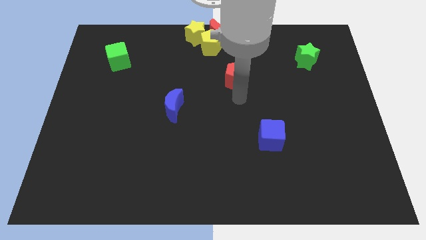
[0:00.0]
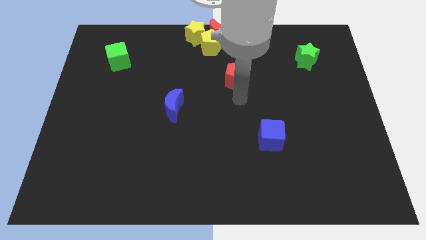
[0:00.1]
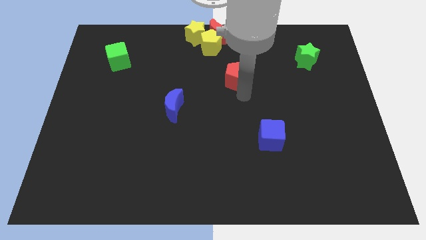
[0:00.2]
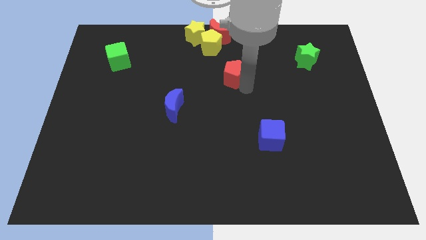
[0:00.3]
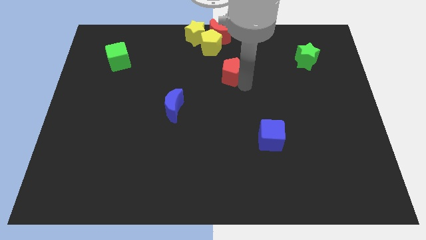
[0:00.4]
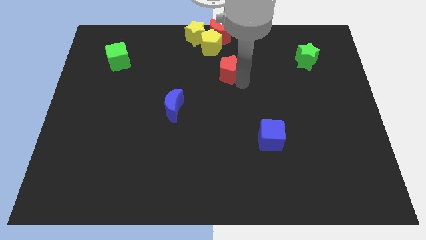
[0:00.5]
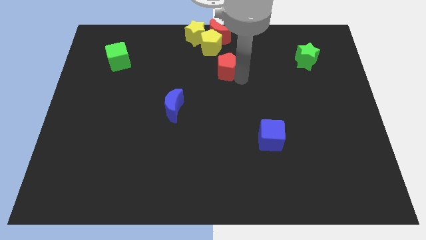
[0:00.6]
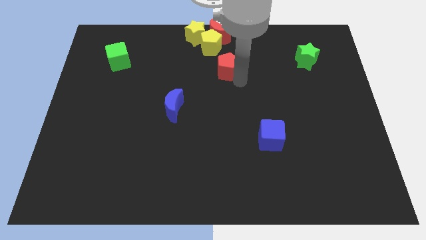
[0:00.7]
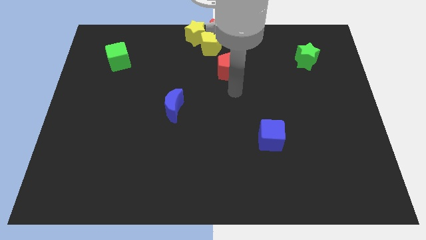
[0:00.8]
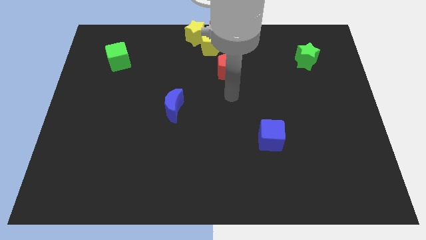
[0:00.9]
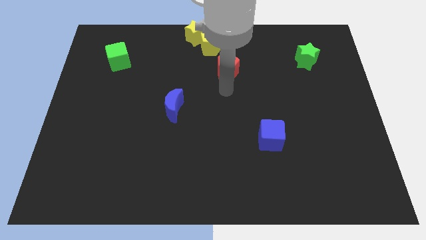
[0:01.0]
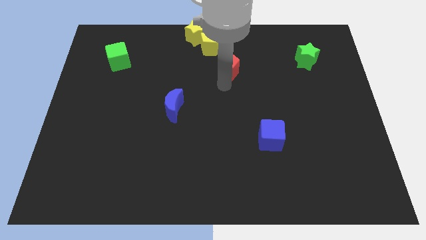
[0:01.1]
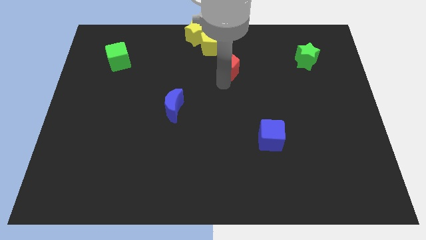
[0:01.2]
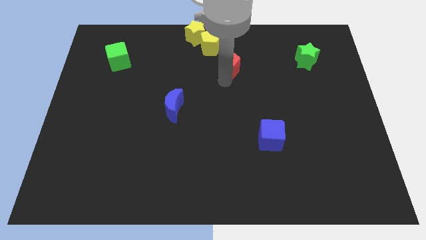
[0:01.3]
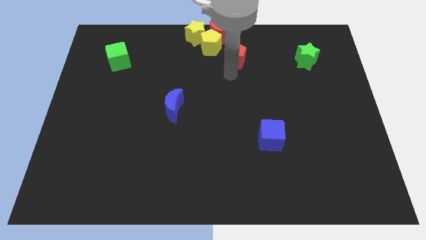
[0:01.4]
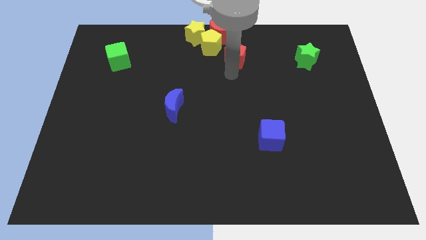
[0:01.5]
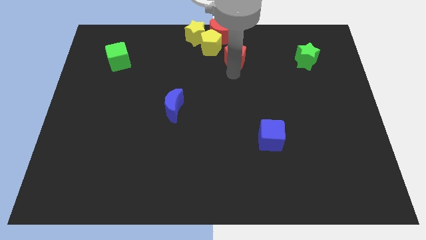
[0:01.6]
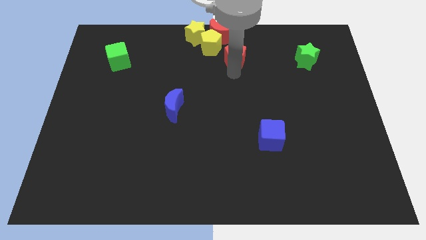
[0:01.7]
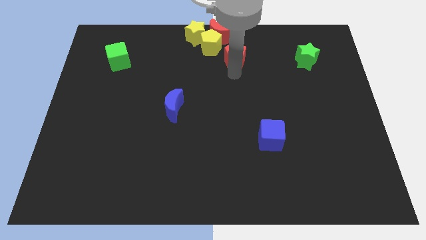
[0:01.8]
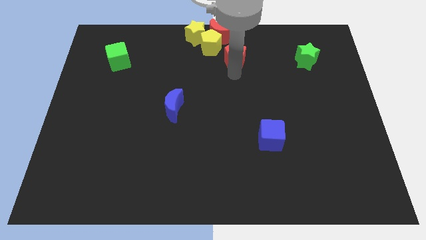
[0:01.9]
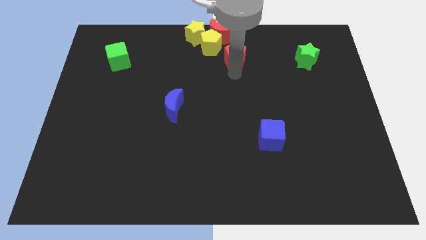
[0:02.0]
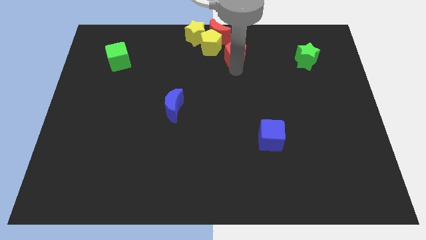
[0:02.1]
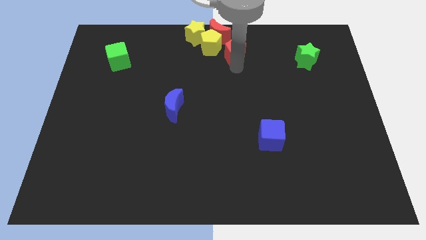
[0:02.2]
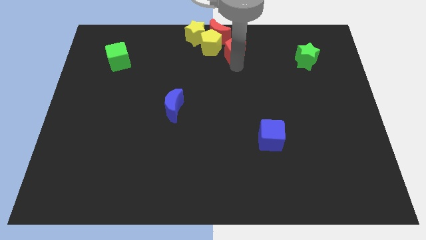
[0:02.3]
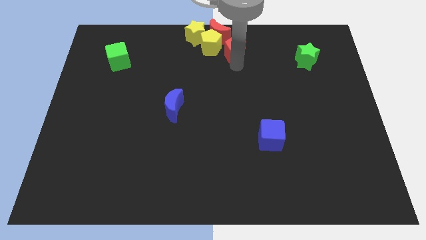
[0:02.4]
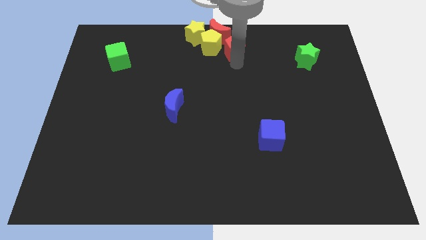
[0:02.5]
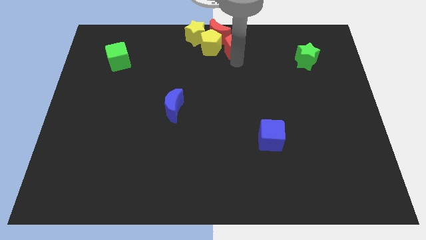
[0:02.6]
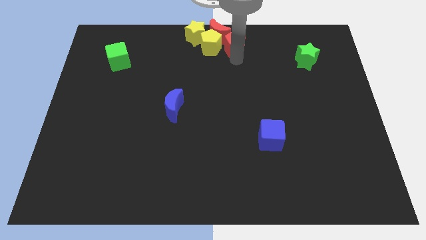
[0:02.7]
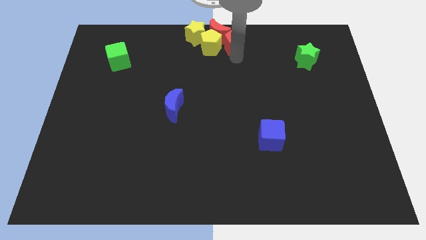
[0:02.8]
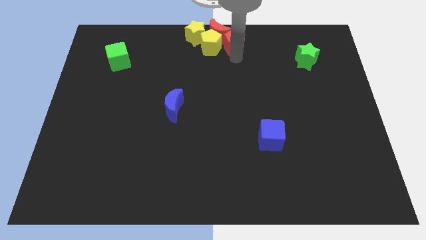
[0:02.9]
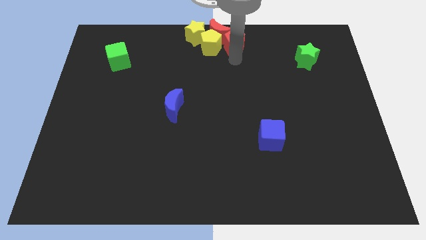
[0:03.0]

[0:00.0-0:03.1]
place red pentagon to the top center of the board

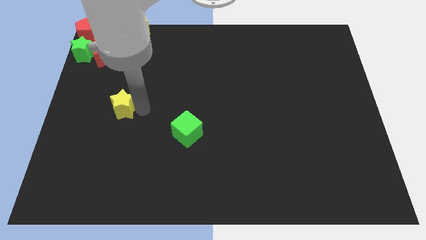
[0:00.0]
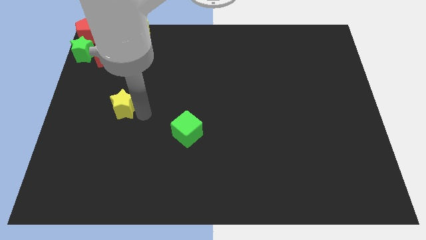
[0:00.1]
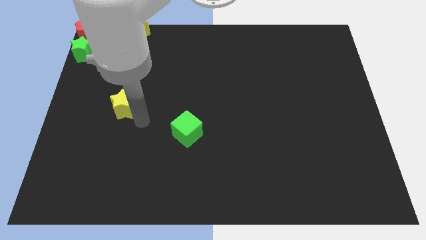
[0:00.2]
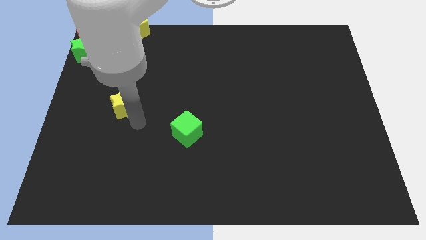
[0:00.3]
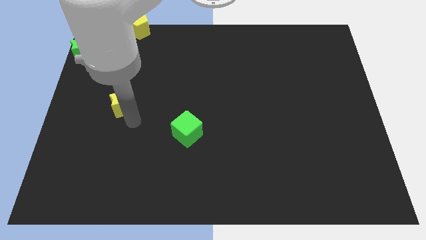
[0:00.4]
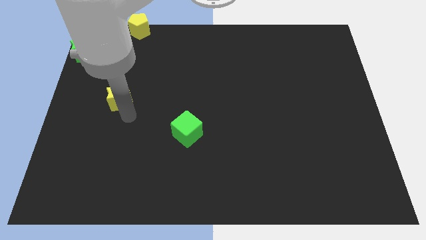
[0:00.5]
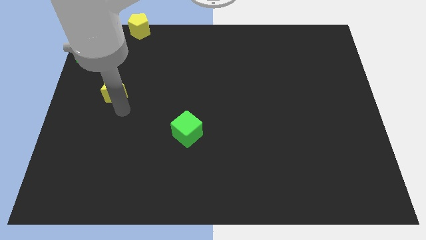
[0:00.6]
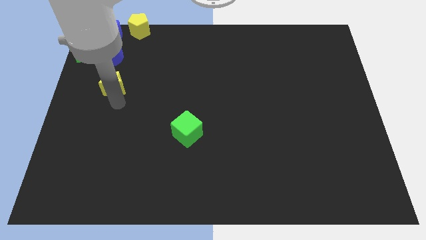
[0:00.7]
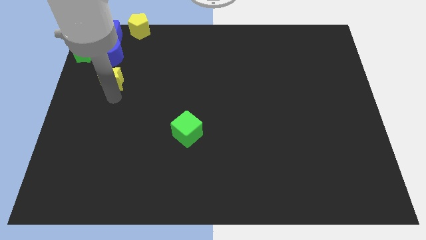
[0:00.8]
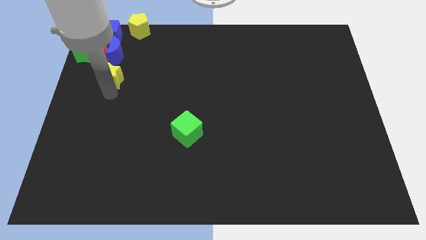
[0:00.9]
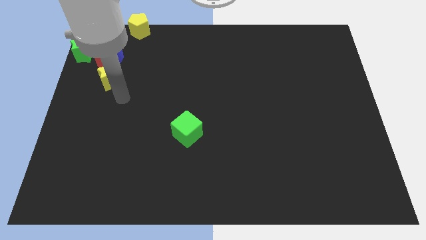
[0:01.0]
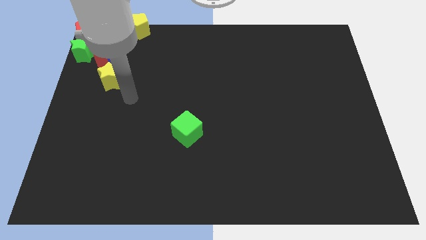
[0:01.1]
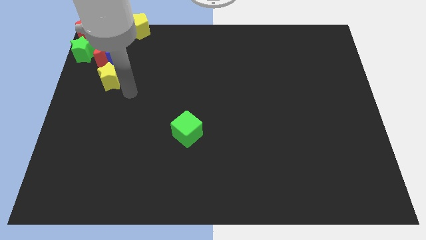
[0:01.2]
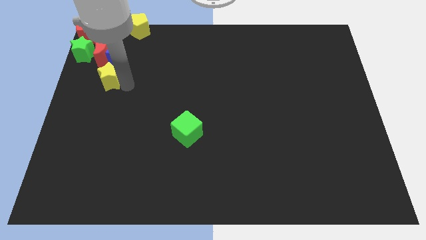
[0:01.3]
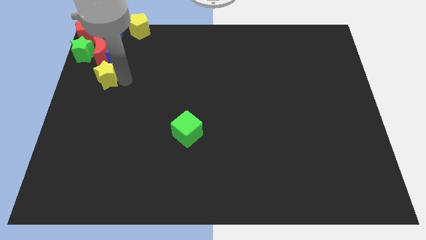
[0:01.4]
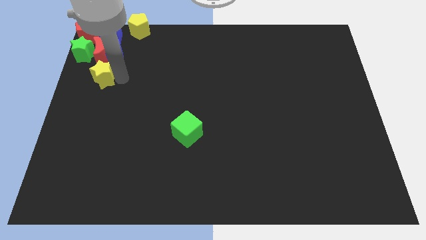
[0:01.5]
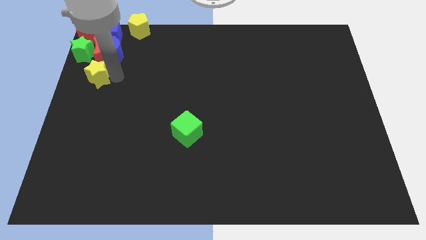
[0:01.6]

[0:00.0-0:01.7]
place the yellow star below the red moon

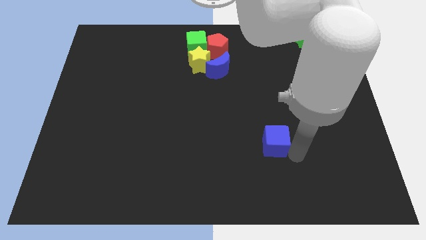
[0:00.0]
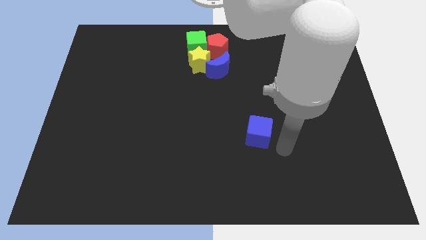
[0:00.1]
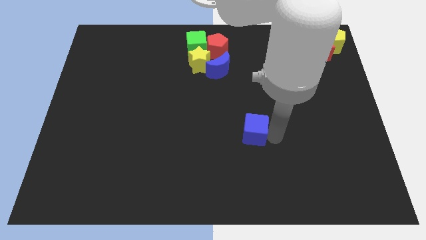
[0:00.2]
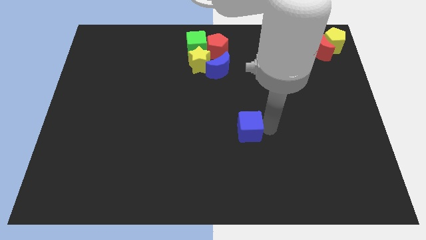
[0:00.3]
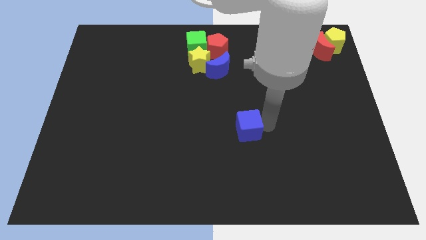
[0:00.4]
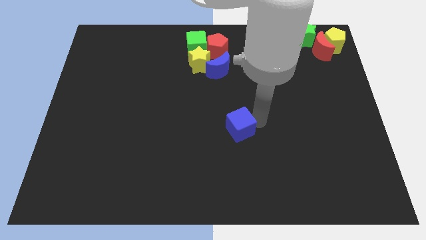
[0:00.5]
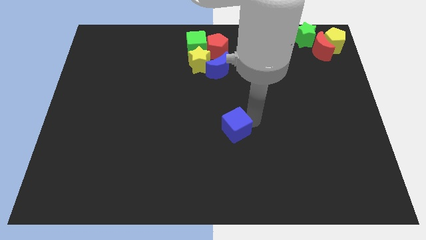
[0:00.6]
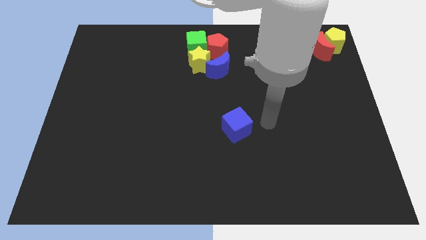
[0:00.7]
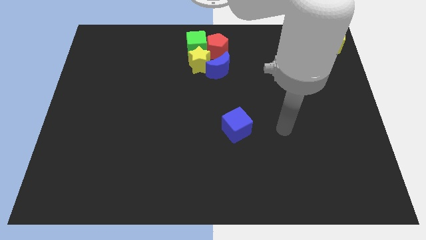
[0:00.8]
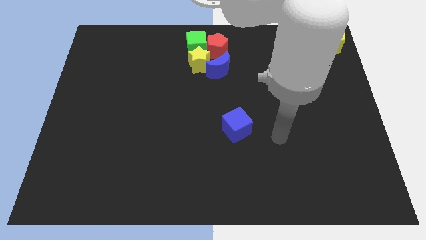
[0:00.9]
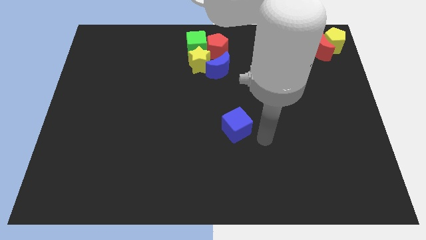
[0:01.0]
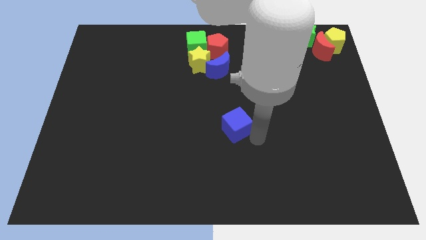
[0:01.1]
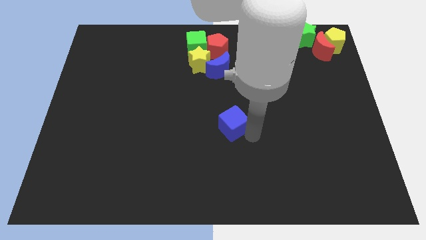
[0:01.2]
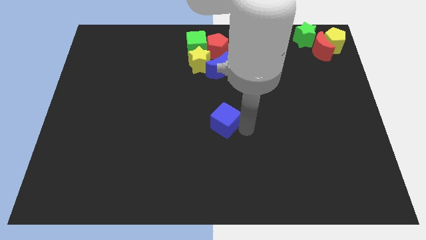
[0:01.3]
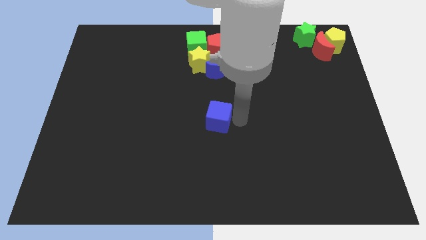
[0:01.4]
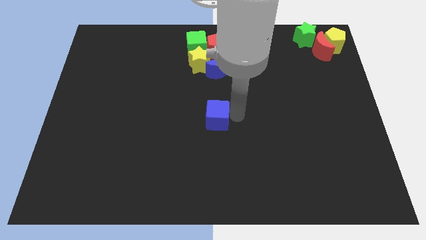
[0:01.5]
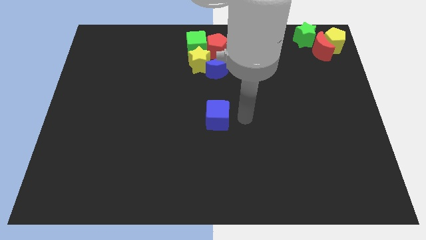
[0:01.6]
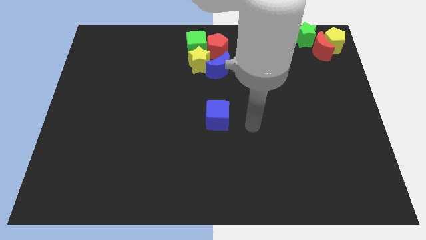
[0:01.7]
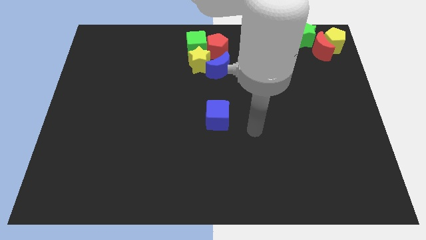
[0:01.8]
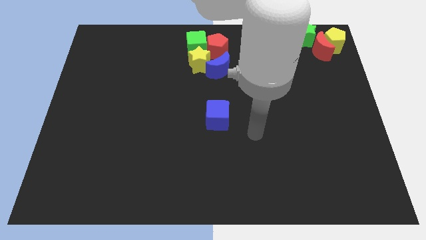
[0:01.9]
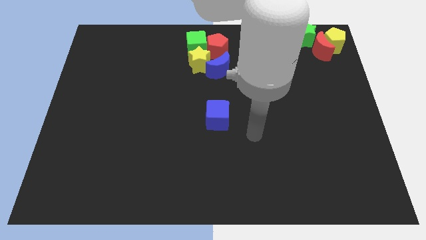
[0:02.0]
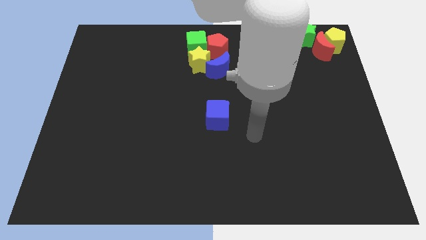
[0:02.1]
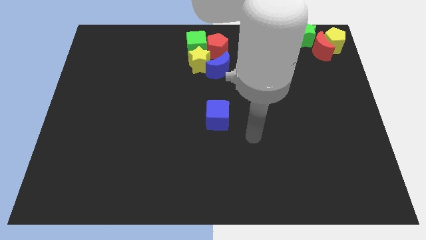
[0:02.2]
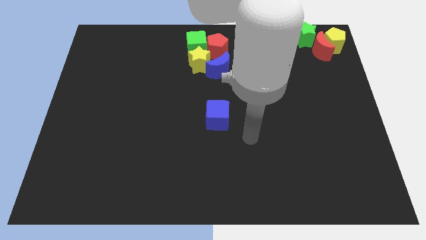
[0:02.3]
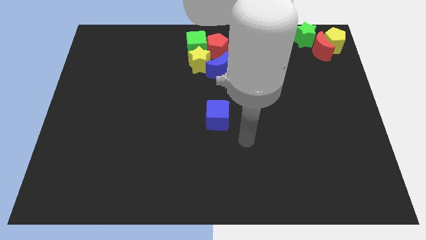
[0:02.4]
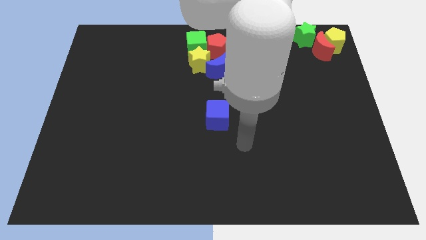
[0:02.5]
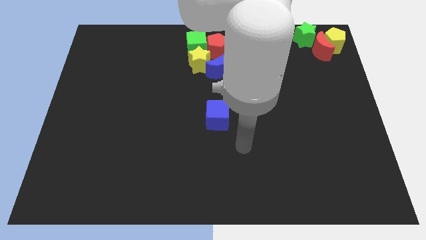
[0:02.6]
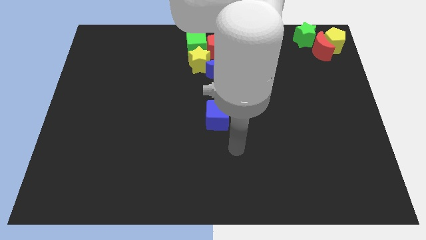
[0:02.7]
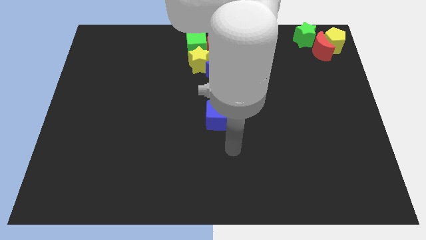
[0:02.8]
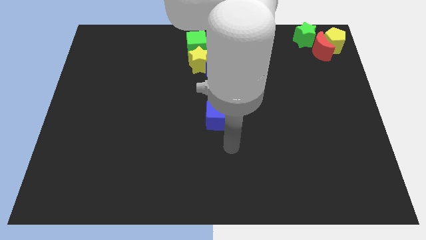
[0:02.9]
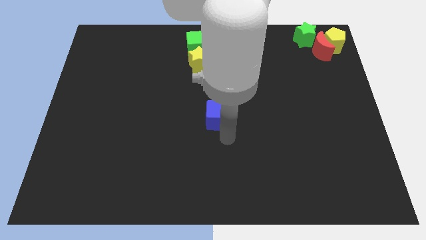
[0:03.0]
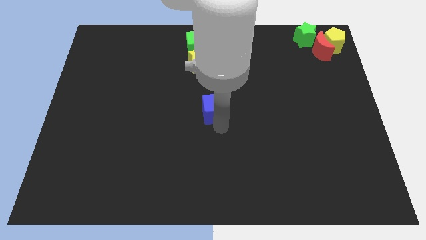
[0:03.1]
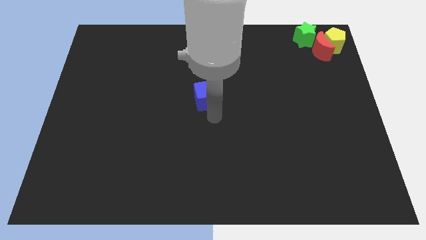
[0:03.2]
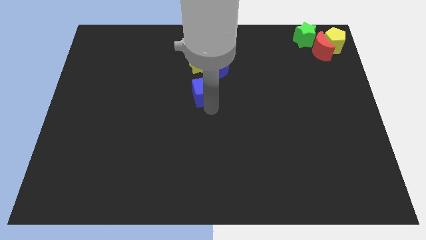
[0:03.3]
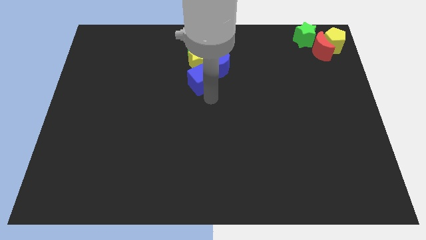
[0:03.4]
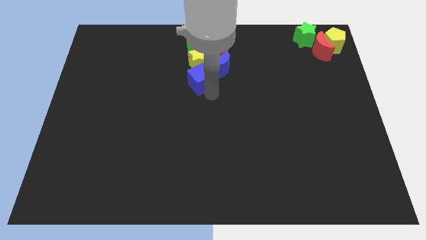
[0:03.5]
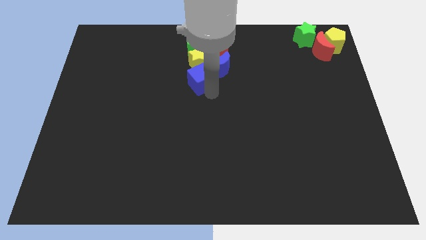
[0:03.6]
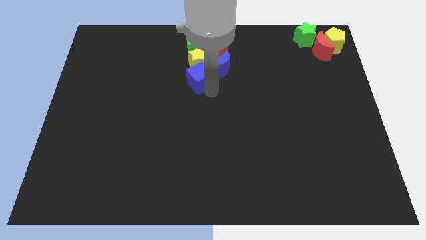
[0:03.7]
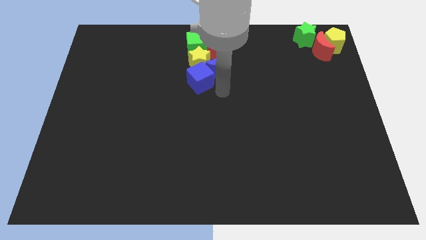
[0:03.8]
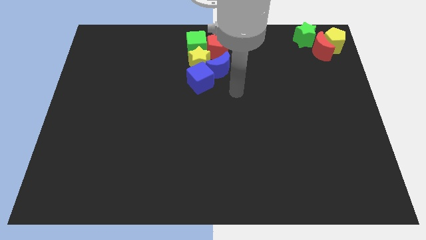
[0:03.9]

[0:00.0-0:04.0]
push the blue cube to the bottom left side of the blue crescent

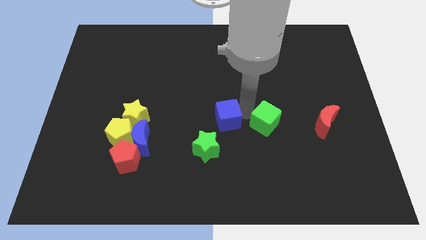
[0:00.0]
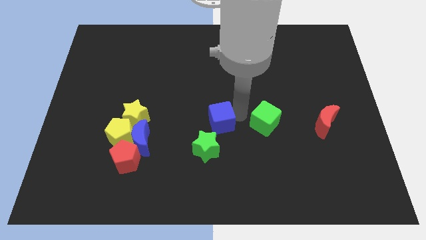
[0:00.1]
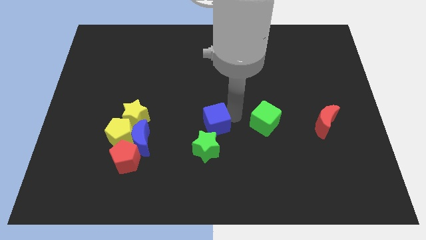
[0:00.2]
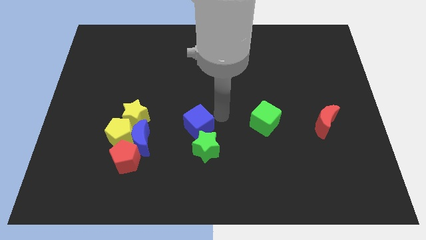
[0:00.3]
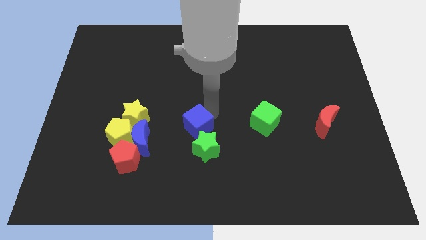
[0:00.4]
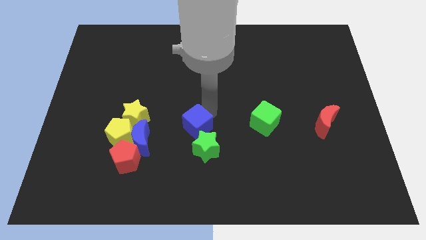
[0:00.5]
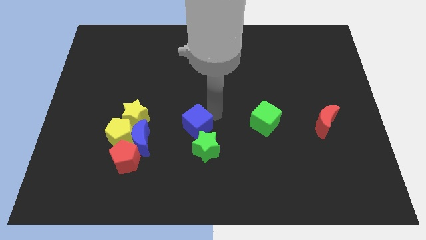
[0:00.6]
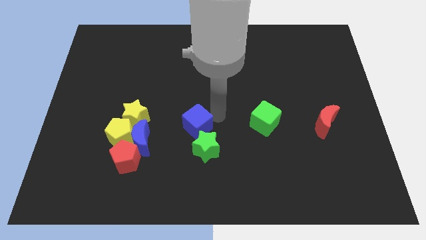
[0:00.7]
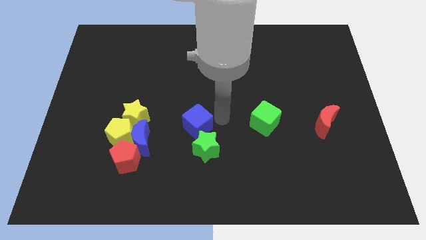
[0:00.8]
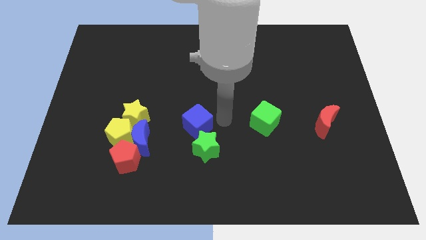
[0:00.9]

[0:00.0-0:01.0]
slide the blue cube above the green star
